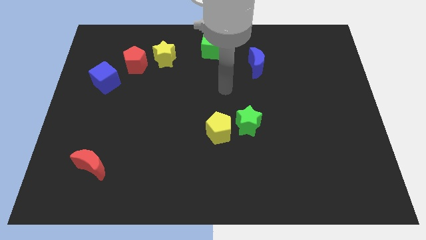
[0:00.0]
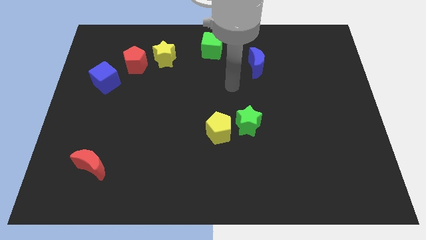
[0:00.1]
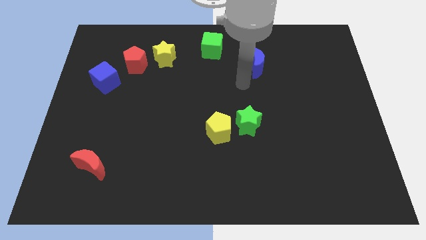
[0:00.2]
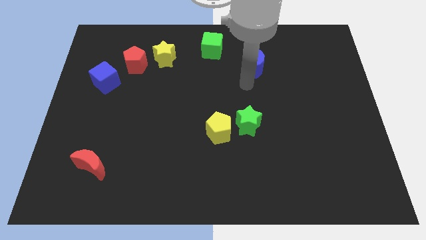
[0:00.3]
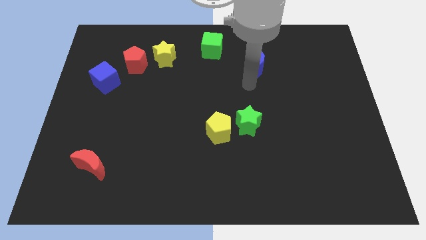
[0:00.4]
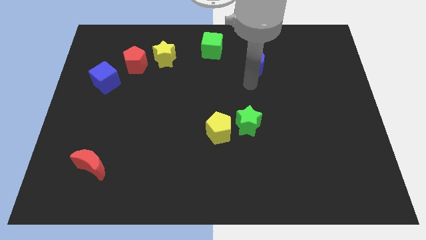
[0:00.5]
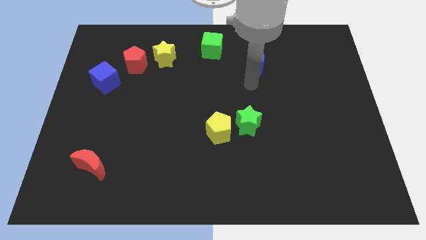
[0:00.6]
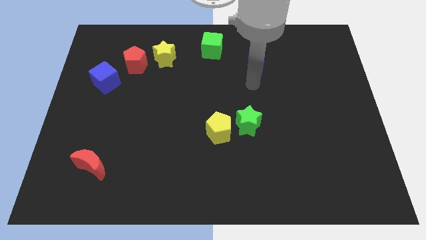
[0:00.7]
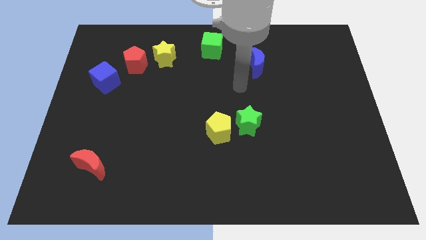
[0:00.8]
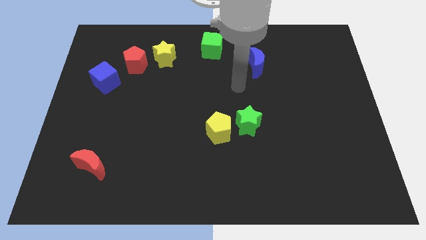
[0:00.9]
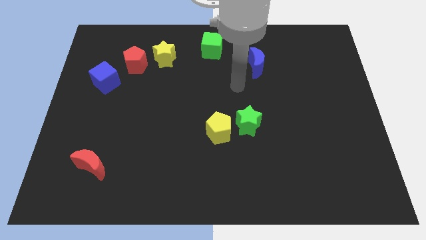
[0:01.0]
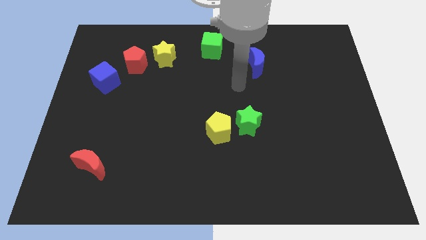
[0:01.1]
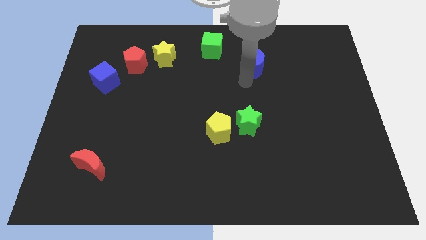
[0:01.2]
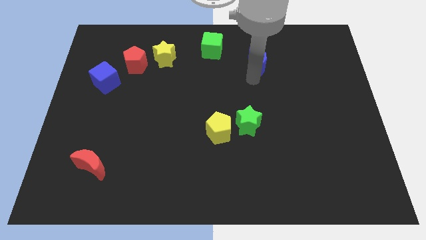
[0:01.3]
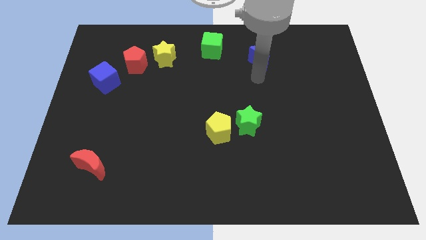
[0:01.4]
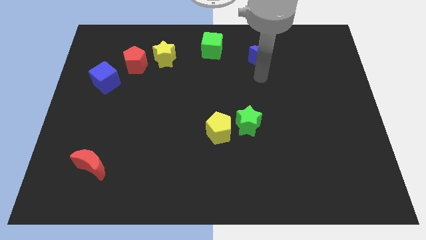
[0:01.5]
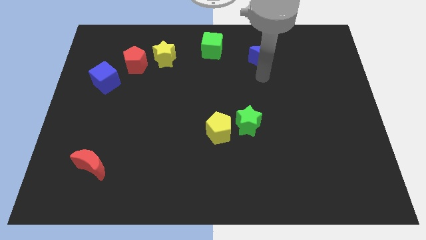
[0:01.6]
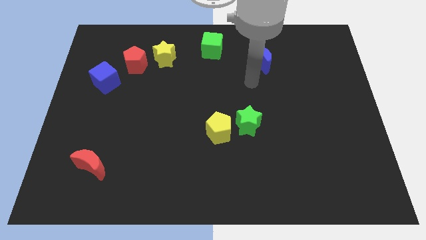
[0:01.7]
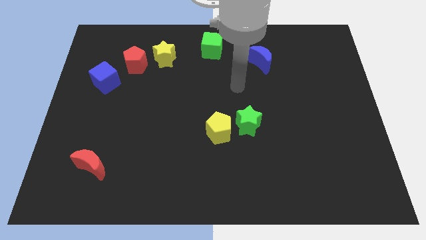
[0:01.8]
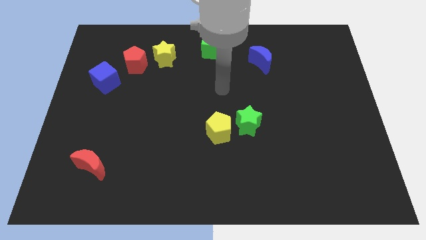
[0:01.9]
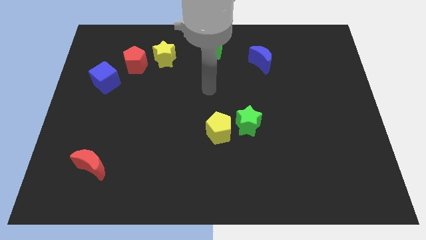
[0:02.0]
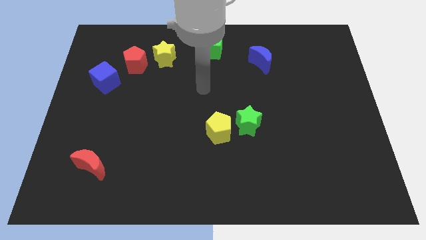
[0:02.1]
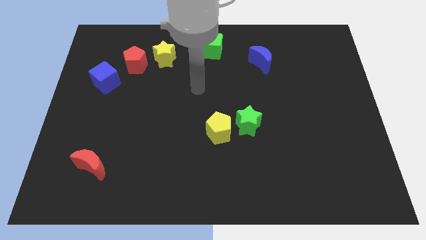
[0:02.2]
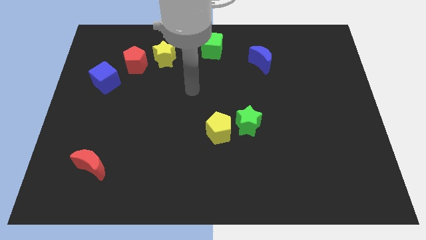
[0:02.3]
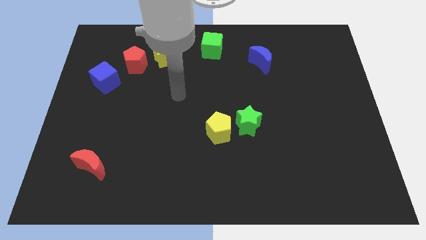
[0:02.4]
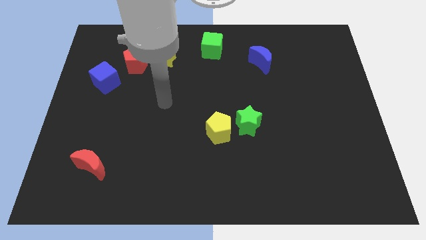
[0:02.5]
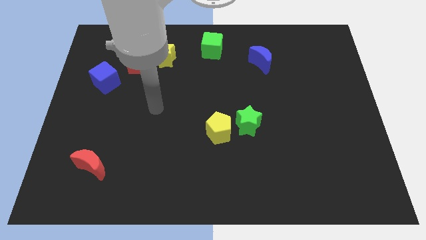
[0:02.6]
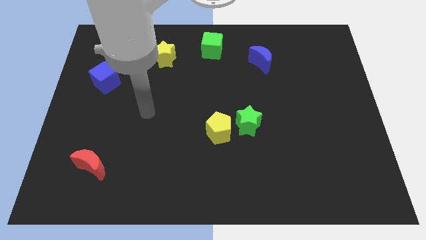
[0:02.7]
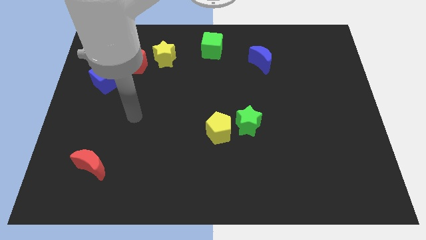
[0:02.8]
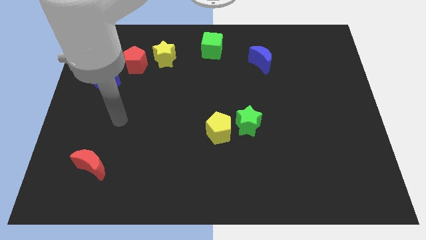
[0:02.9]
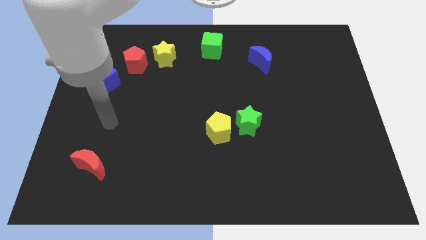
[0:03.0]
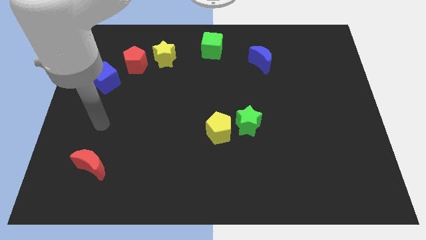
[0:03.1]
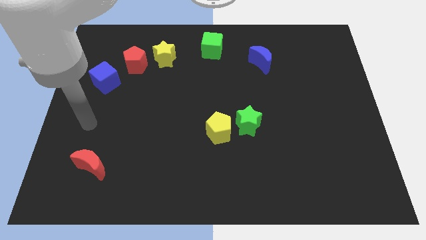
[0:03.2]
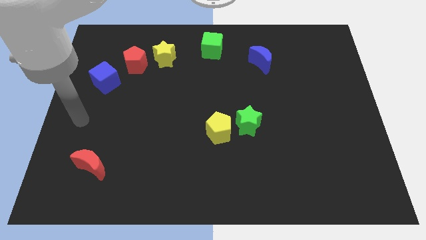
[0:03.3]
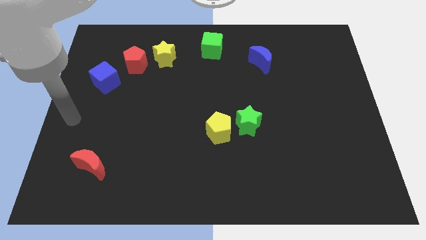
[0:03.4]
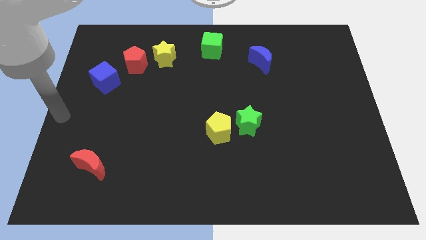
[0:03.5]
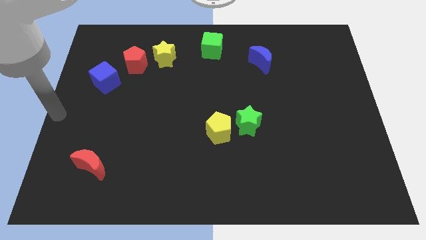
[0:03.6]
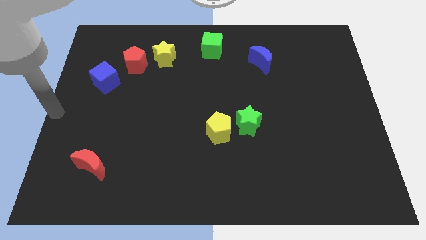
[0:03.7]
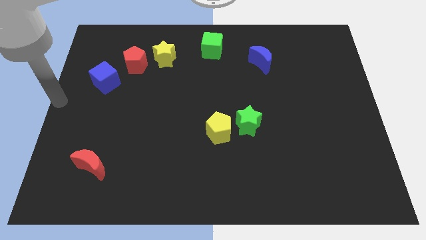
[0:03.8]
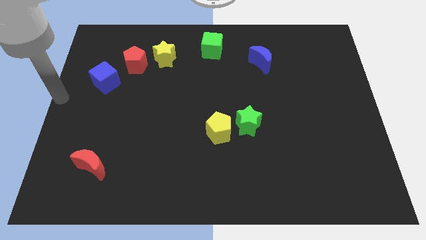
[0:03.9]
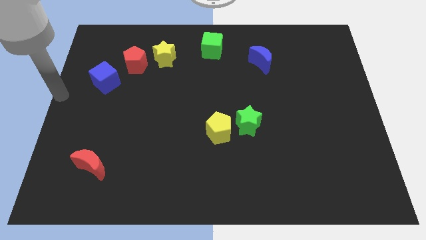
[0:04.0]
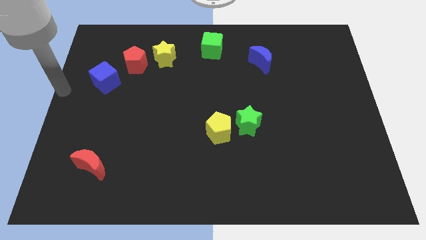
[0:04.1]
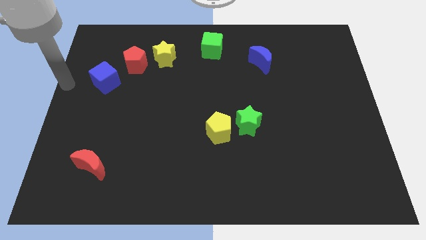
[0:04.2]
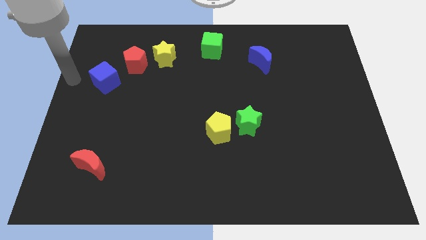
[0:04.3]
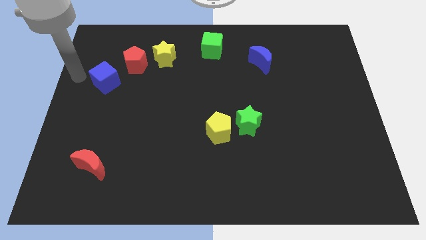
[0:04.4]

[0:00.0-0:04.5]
slightly move the blue moon towards the right

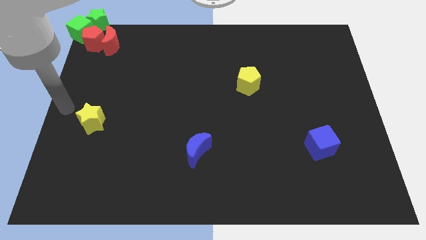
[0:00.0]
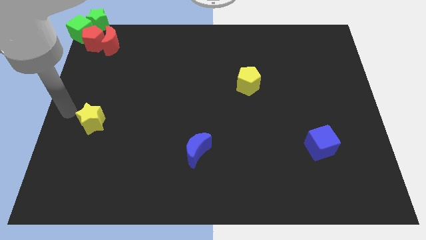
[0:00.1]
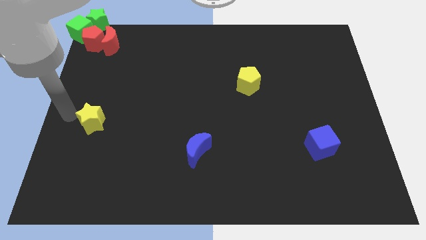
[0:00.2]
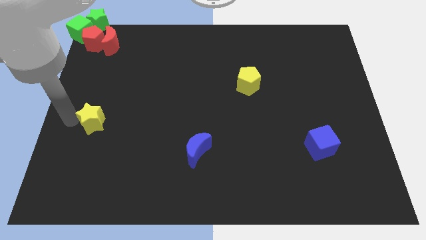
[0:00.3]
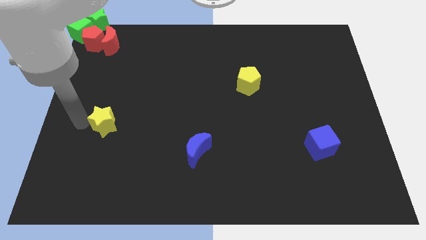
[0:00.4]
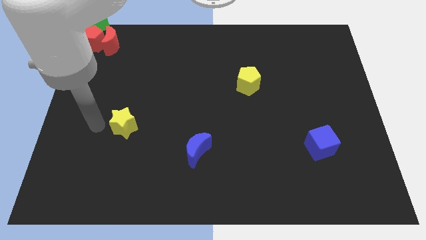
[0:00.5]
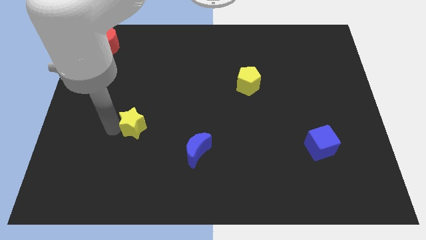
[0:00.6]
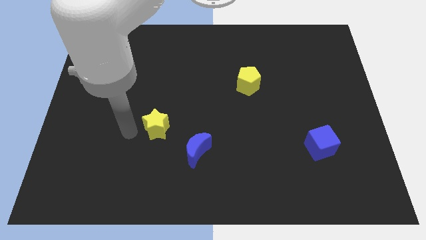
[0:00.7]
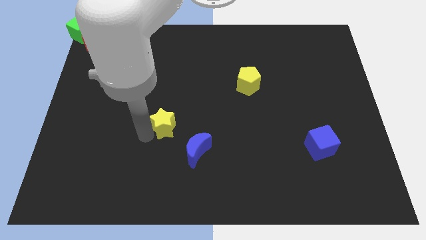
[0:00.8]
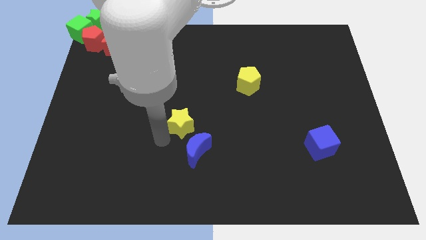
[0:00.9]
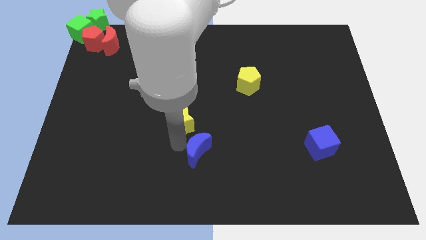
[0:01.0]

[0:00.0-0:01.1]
put the yellow star at the top left side of blue moon

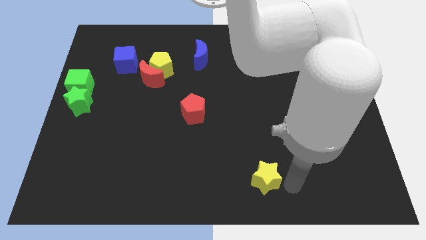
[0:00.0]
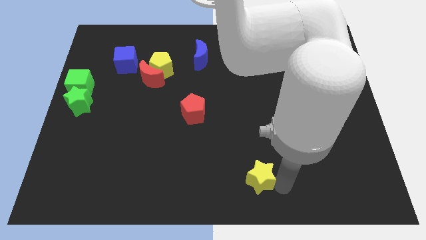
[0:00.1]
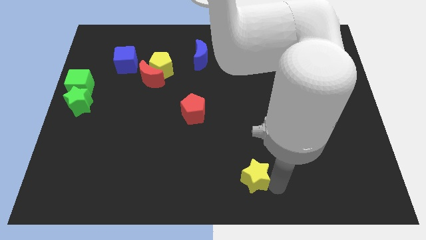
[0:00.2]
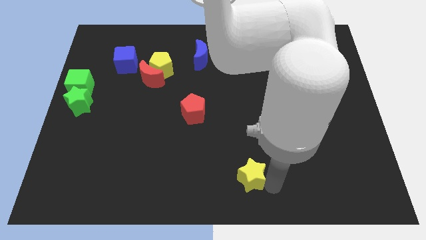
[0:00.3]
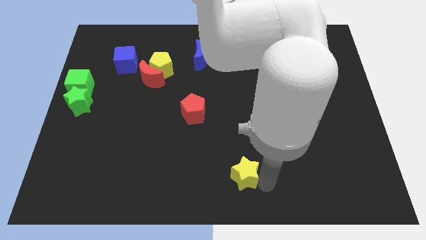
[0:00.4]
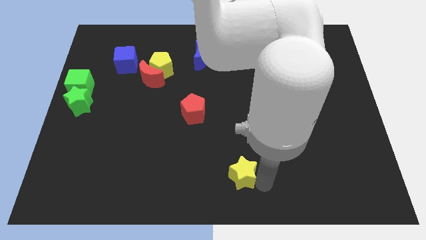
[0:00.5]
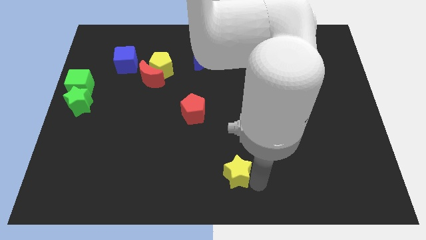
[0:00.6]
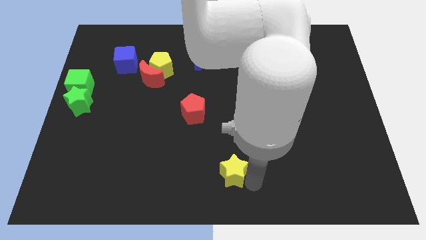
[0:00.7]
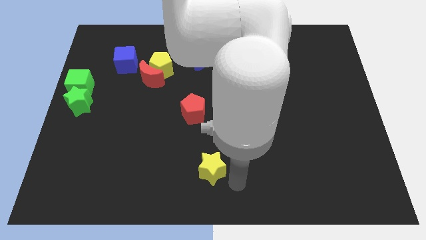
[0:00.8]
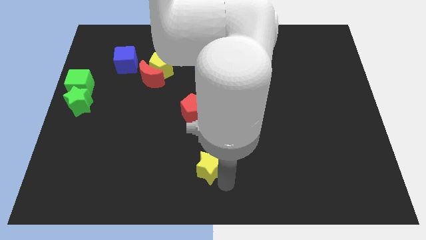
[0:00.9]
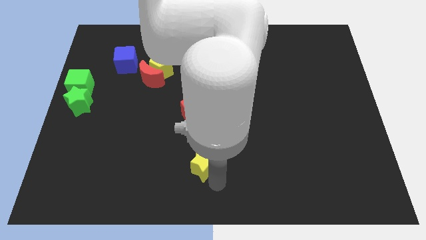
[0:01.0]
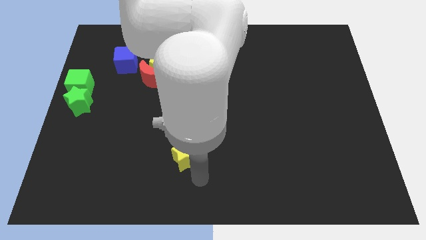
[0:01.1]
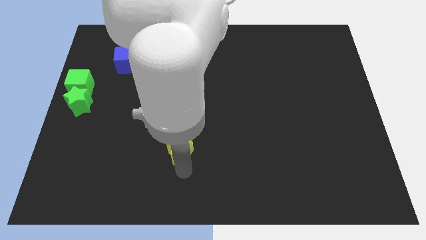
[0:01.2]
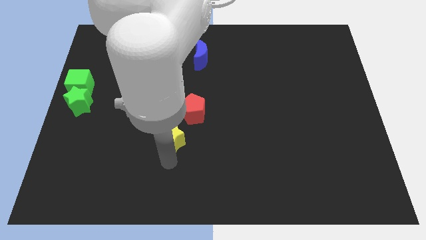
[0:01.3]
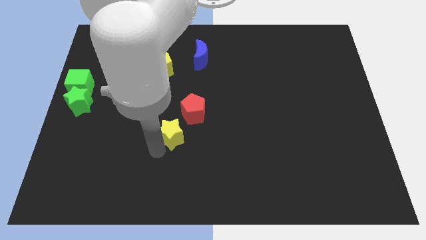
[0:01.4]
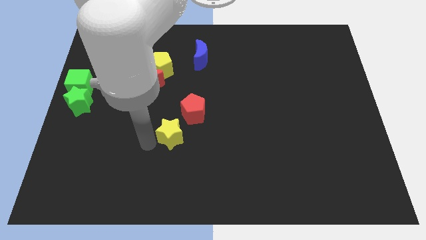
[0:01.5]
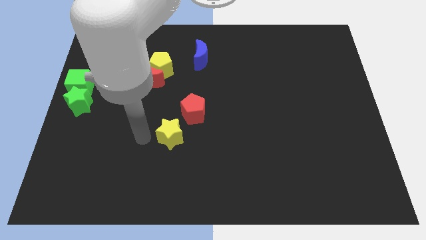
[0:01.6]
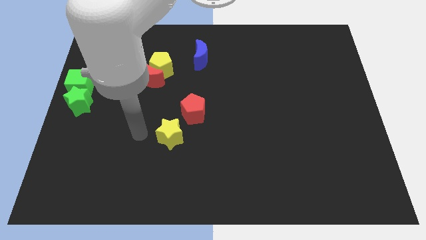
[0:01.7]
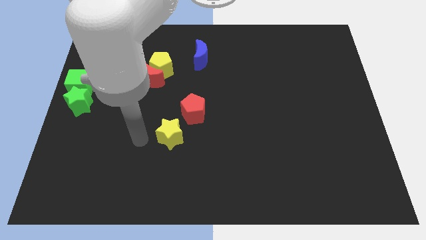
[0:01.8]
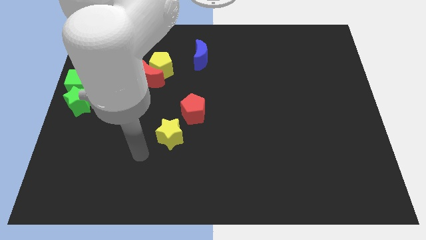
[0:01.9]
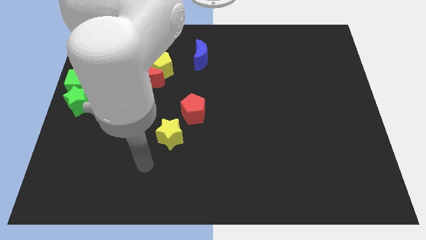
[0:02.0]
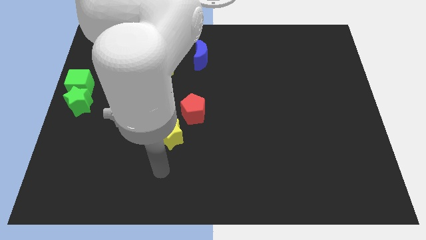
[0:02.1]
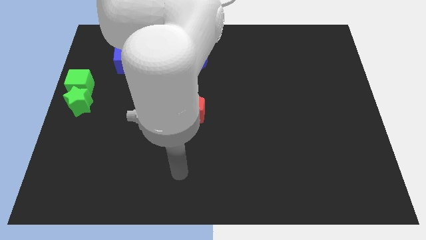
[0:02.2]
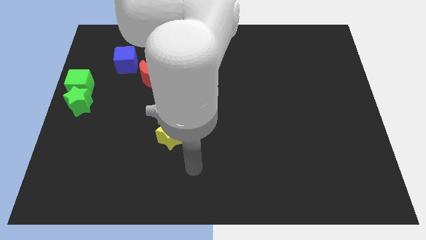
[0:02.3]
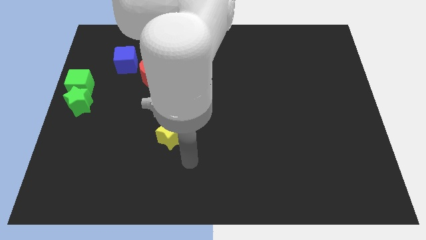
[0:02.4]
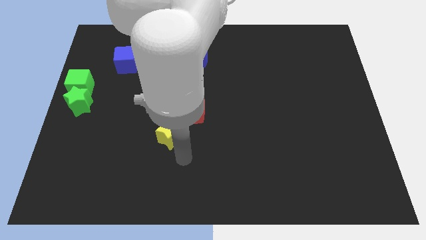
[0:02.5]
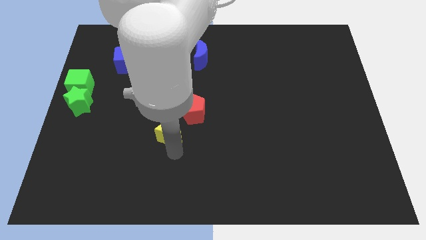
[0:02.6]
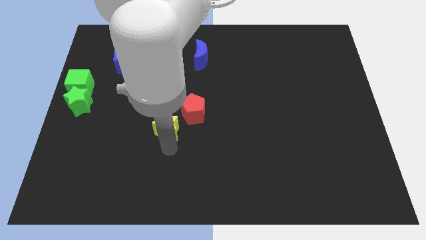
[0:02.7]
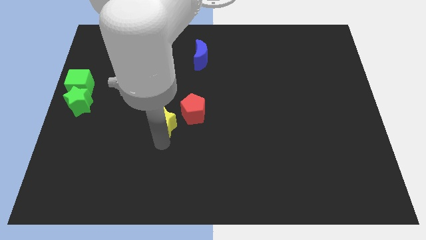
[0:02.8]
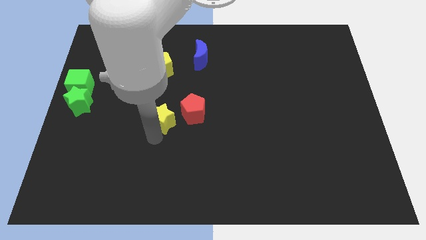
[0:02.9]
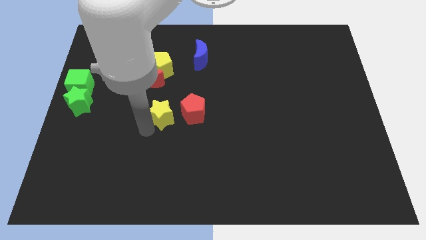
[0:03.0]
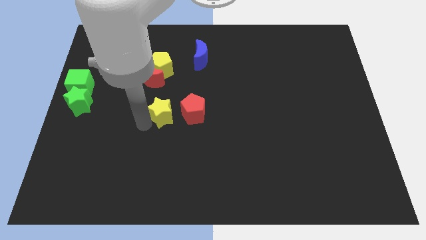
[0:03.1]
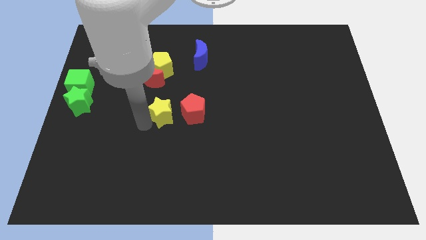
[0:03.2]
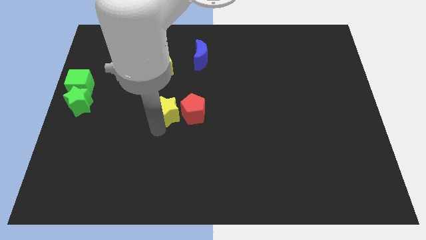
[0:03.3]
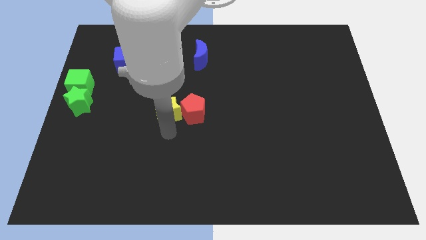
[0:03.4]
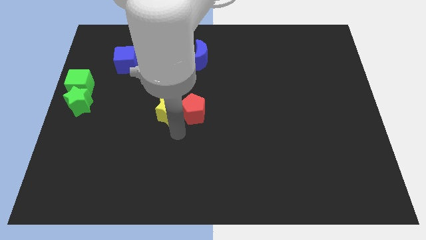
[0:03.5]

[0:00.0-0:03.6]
place the yellow star to the left side of red pentagon
